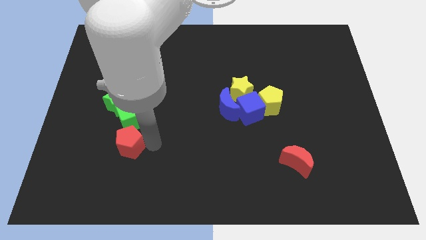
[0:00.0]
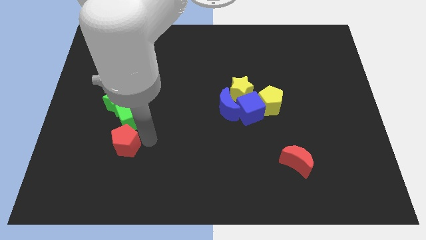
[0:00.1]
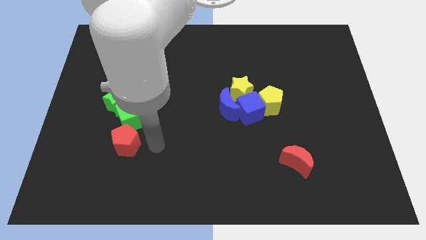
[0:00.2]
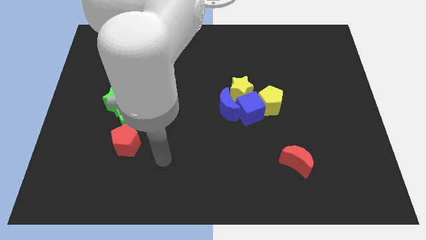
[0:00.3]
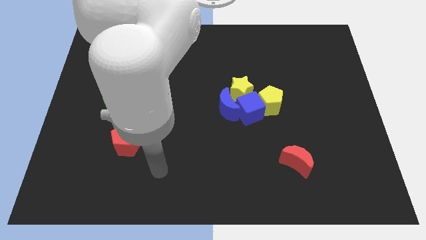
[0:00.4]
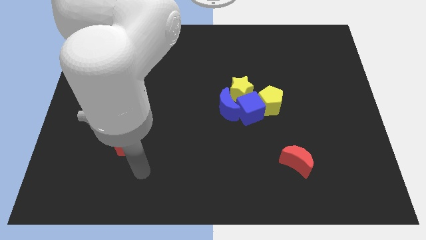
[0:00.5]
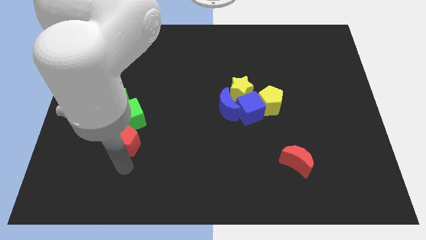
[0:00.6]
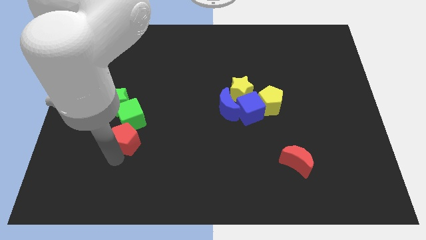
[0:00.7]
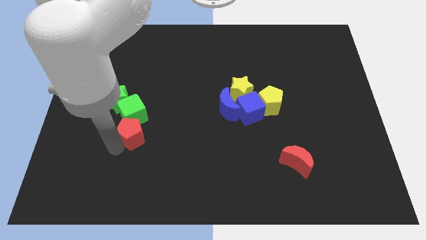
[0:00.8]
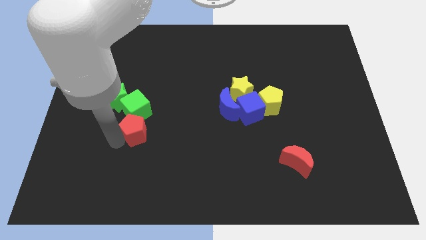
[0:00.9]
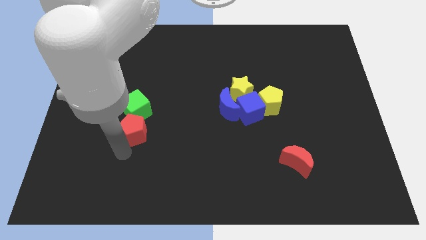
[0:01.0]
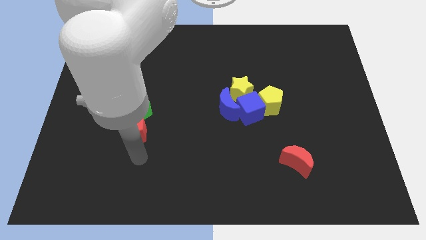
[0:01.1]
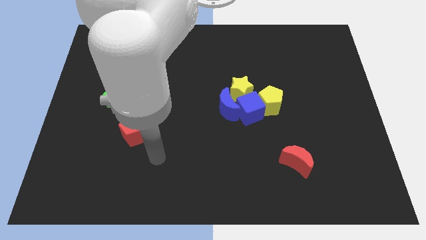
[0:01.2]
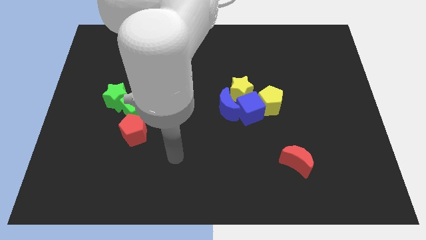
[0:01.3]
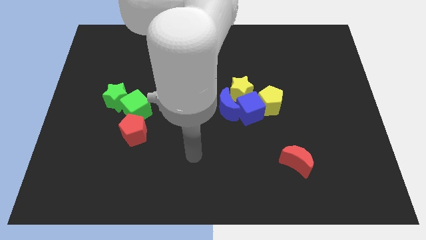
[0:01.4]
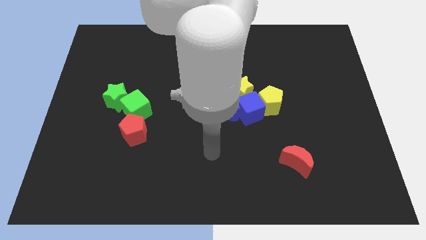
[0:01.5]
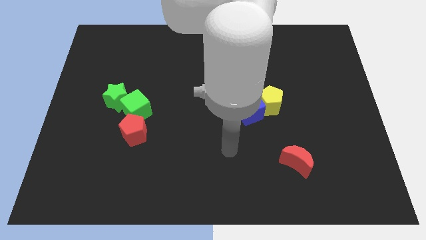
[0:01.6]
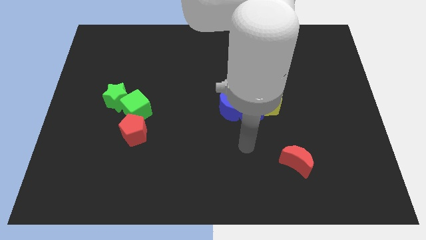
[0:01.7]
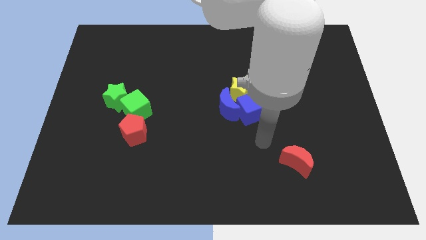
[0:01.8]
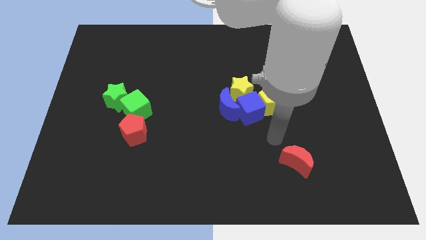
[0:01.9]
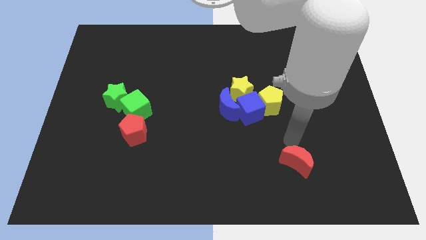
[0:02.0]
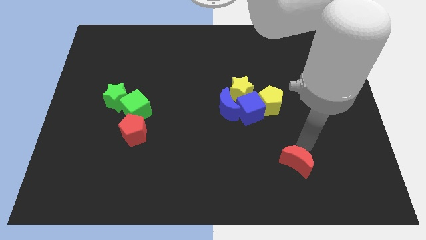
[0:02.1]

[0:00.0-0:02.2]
slightly move the red pentagon towards the center left of the board

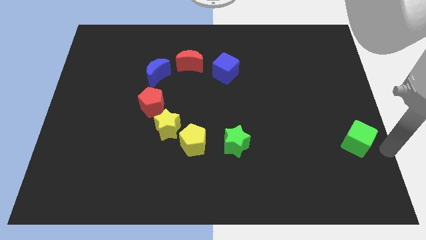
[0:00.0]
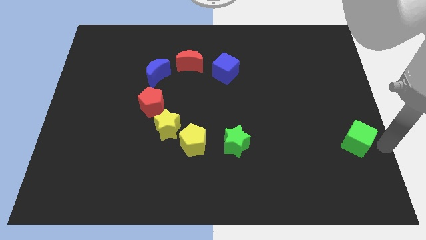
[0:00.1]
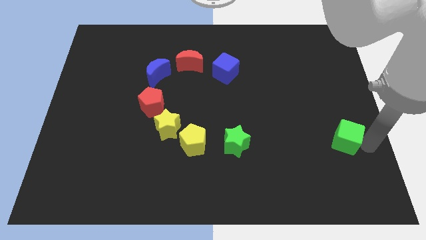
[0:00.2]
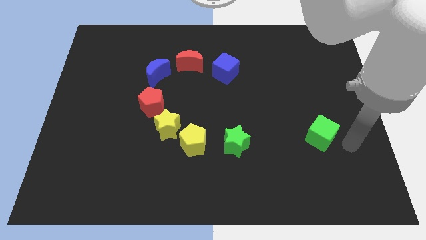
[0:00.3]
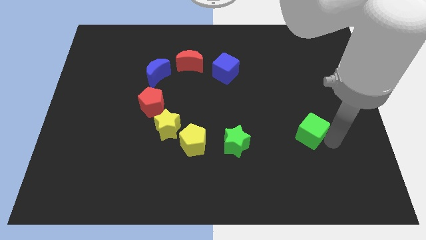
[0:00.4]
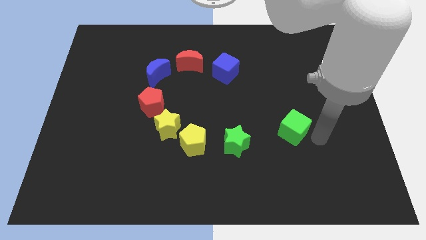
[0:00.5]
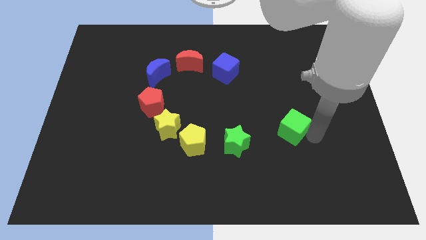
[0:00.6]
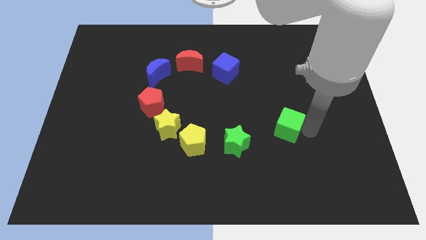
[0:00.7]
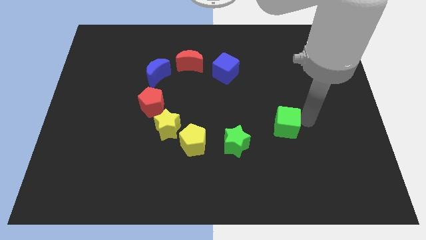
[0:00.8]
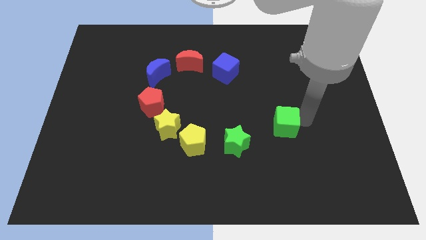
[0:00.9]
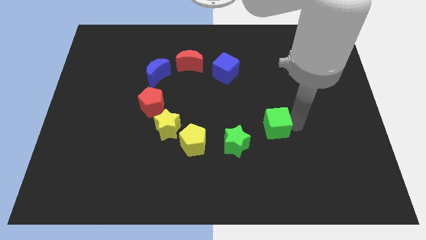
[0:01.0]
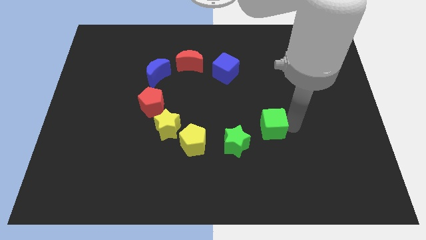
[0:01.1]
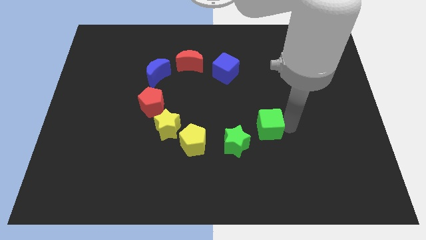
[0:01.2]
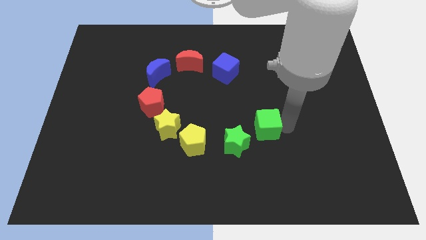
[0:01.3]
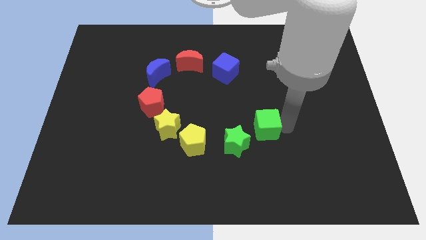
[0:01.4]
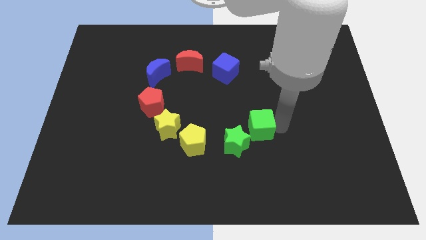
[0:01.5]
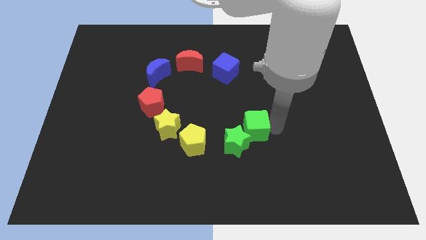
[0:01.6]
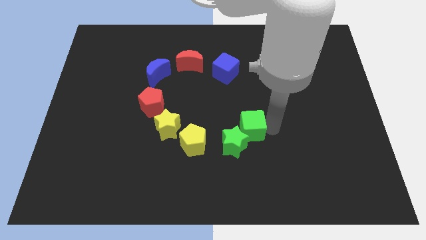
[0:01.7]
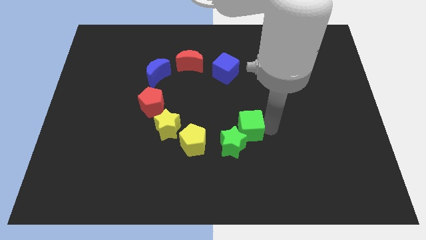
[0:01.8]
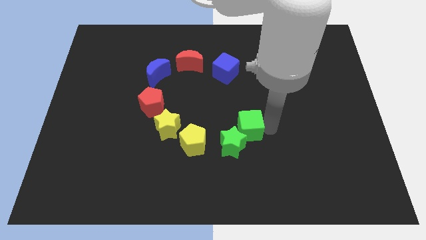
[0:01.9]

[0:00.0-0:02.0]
make the green cube to the top side of the green star

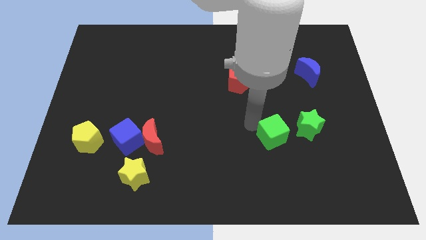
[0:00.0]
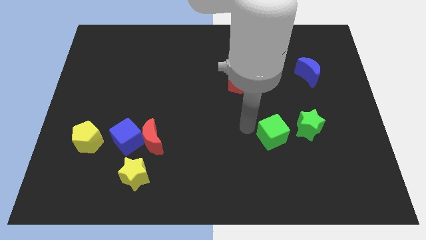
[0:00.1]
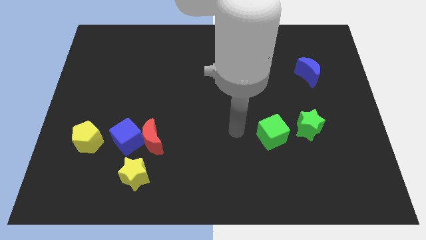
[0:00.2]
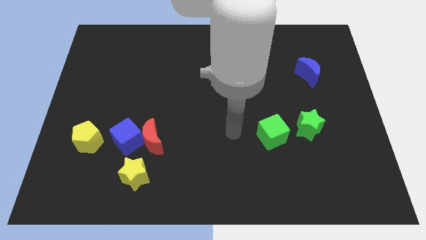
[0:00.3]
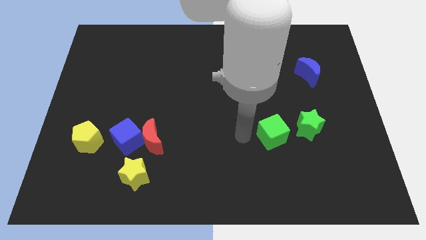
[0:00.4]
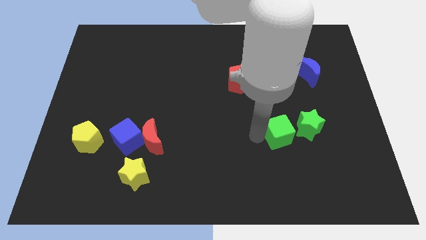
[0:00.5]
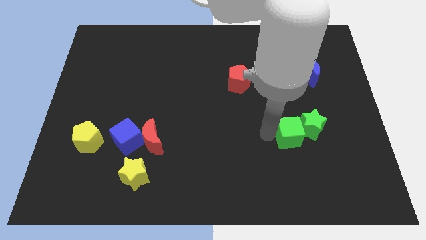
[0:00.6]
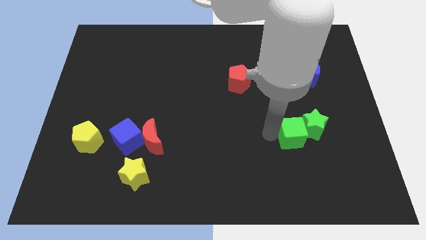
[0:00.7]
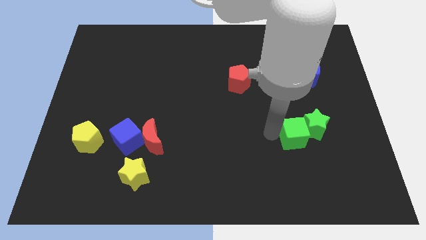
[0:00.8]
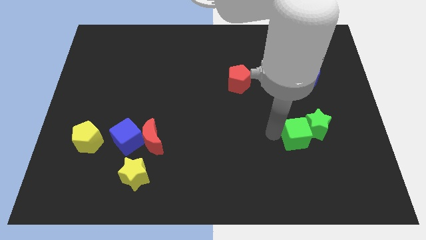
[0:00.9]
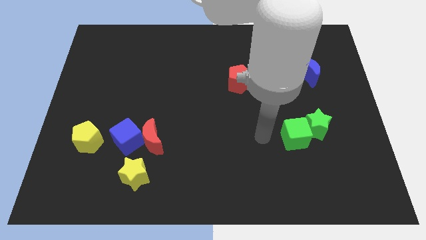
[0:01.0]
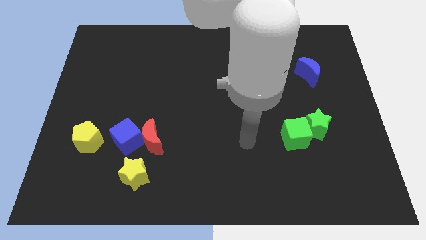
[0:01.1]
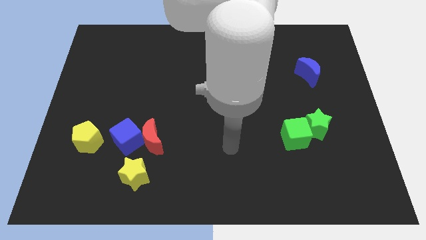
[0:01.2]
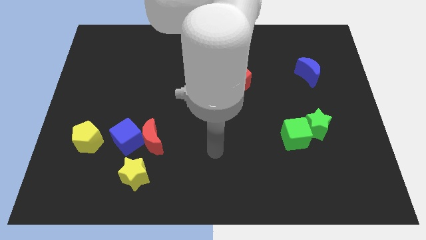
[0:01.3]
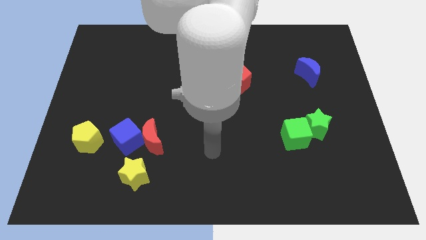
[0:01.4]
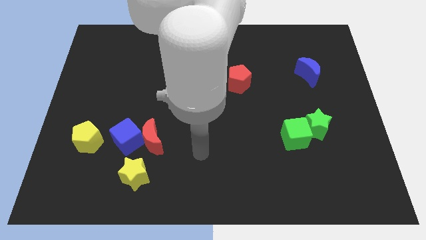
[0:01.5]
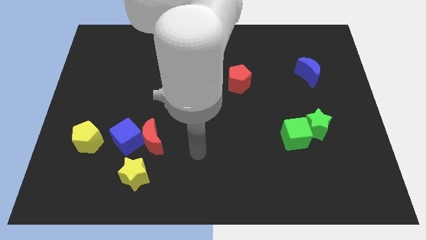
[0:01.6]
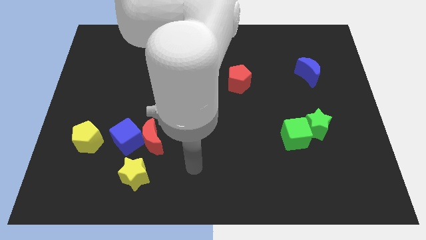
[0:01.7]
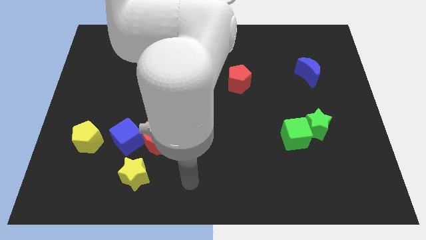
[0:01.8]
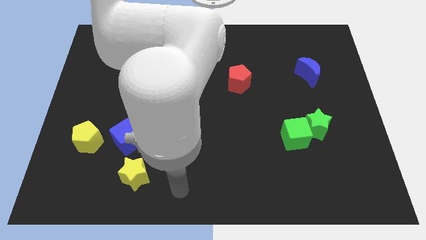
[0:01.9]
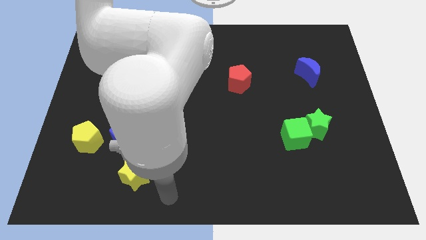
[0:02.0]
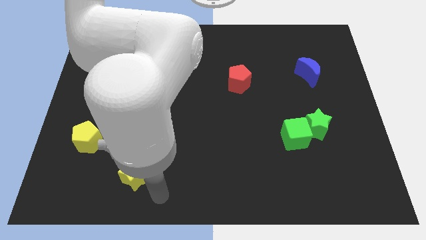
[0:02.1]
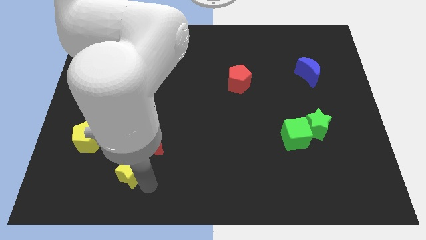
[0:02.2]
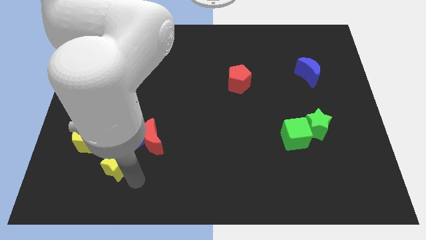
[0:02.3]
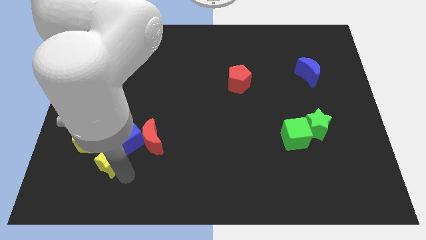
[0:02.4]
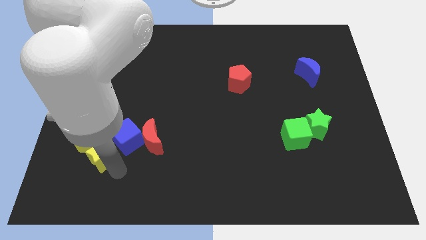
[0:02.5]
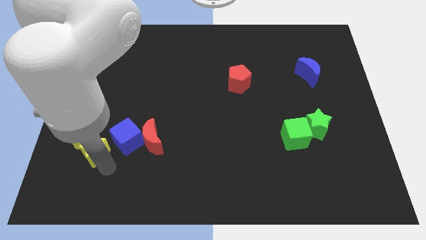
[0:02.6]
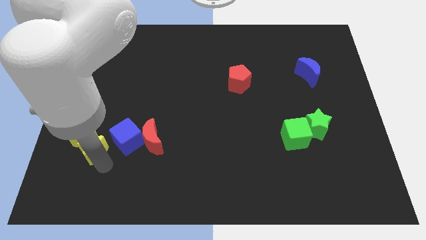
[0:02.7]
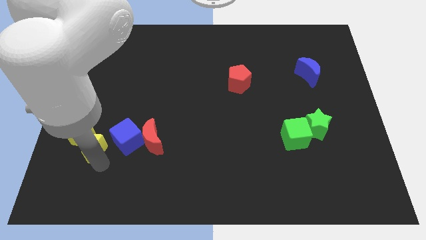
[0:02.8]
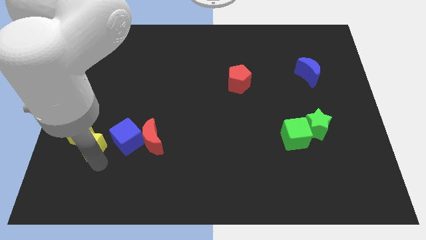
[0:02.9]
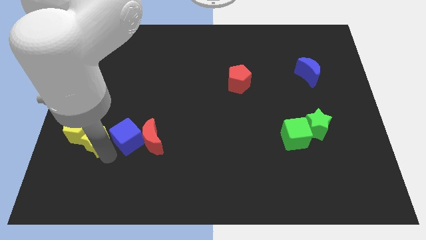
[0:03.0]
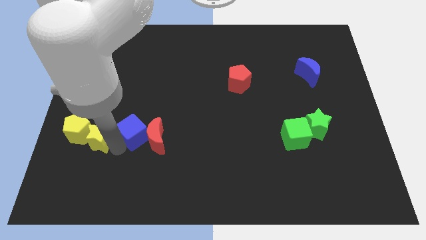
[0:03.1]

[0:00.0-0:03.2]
push the yellow blocks towards the left center

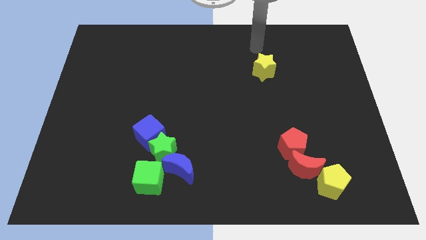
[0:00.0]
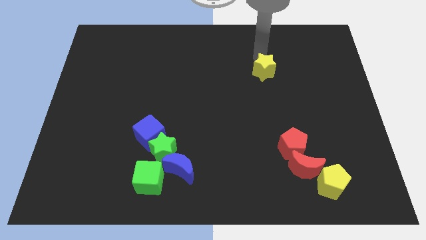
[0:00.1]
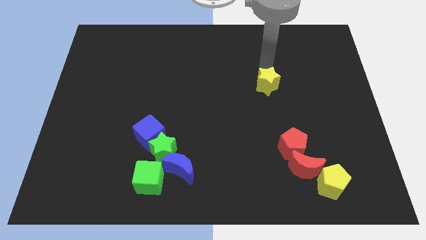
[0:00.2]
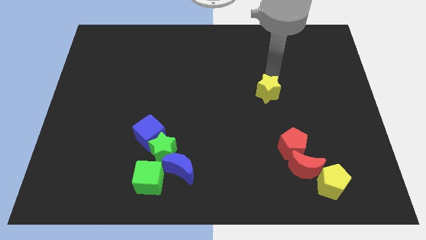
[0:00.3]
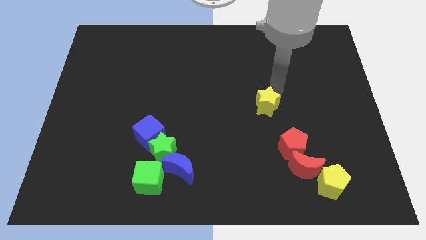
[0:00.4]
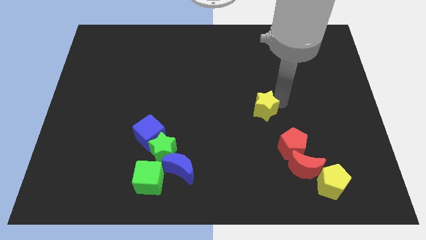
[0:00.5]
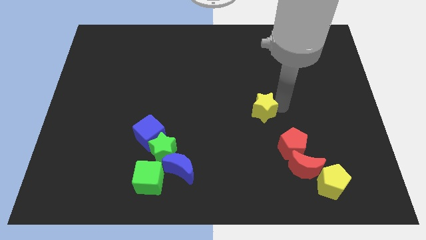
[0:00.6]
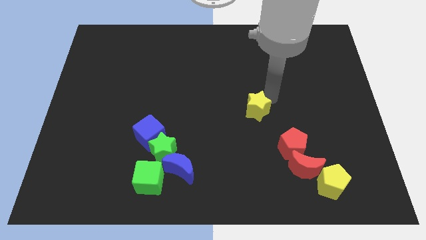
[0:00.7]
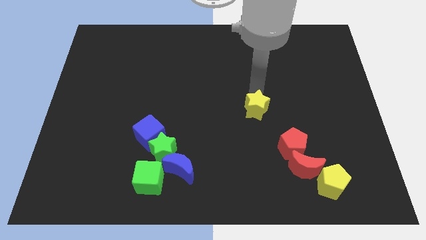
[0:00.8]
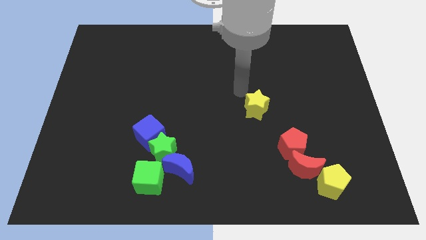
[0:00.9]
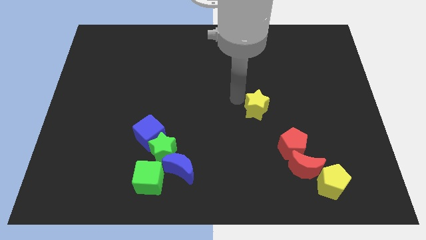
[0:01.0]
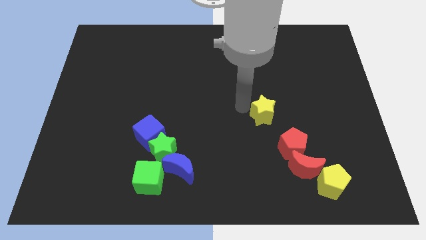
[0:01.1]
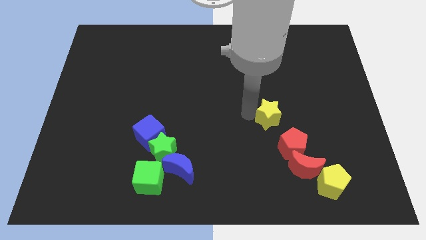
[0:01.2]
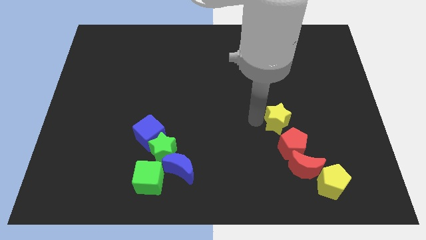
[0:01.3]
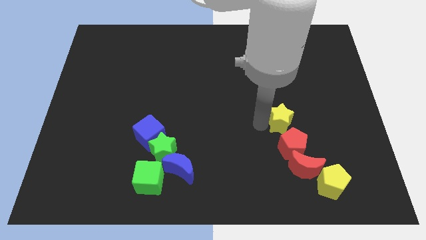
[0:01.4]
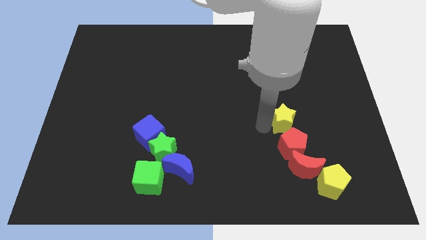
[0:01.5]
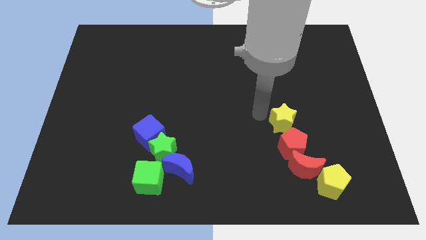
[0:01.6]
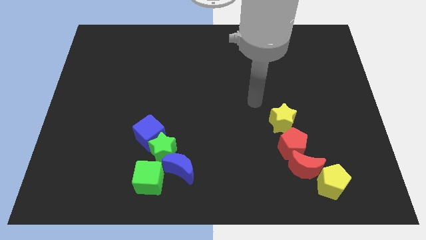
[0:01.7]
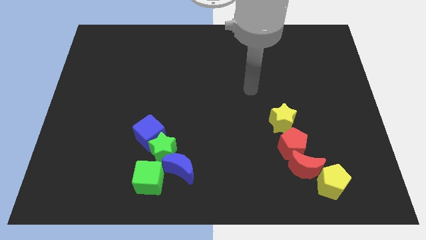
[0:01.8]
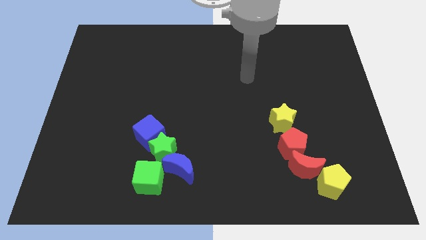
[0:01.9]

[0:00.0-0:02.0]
put the yellow star above the red pentagon
